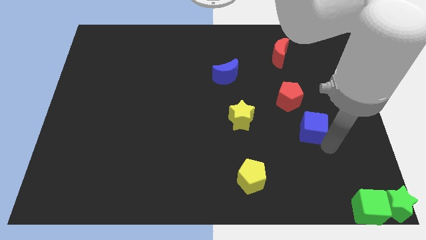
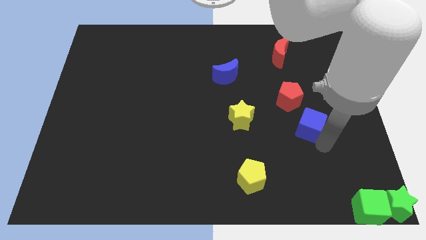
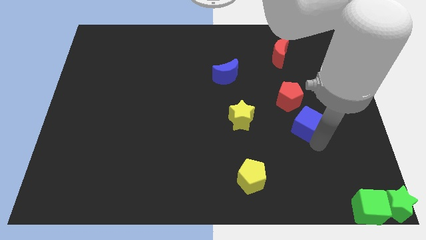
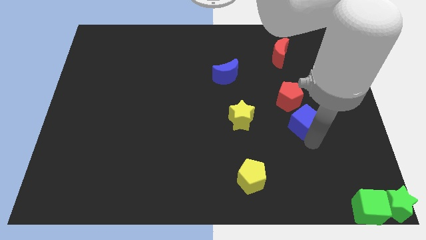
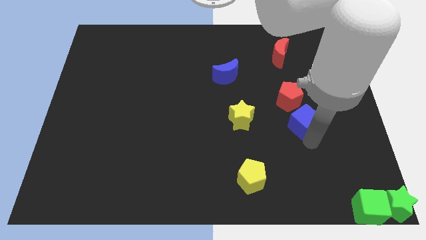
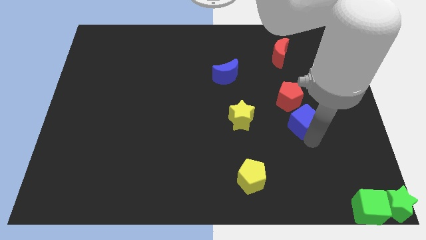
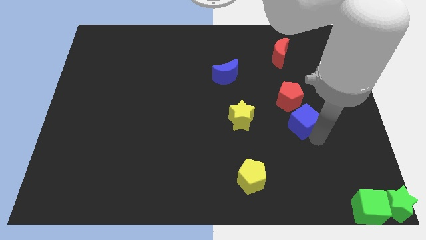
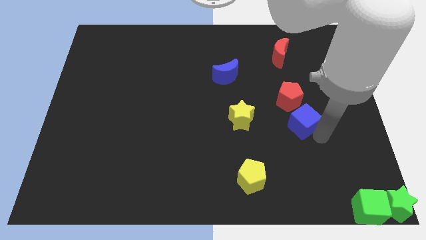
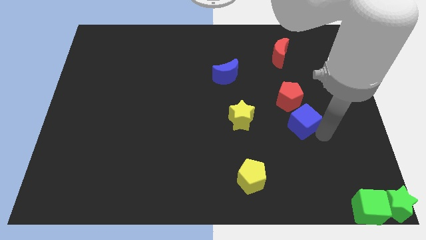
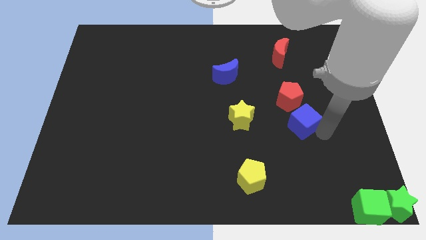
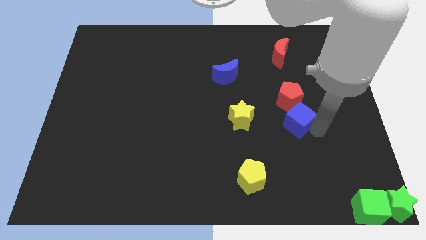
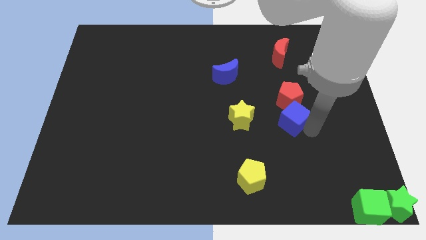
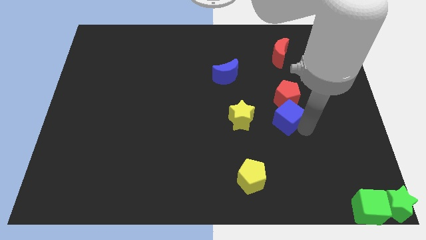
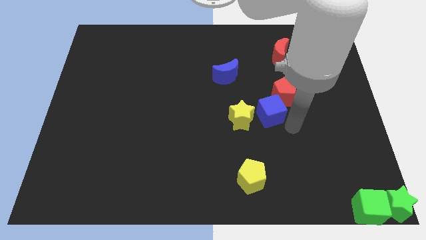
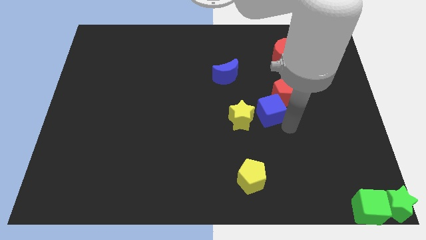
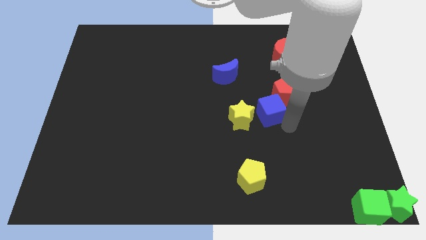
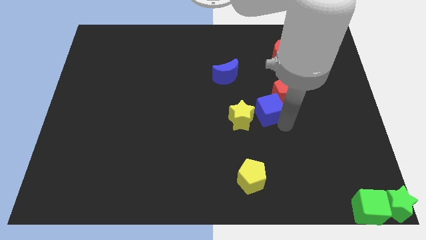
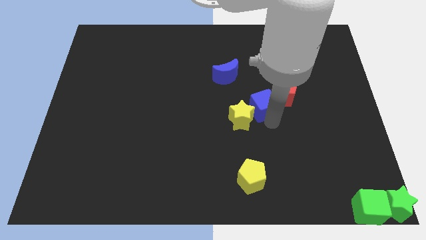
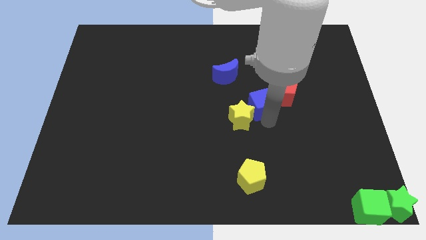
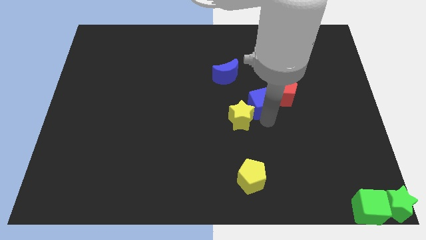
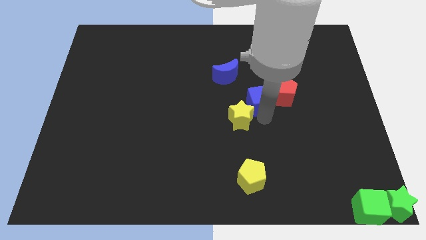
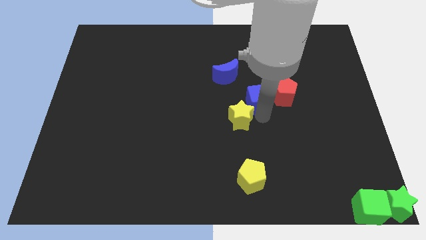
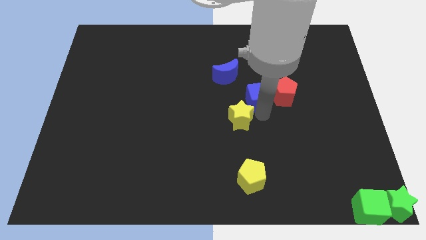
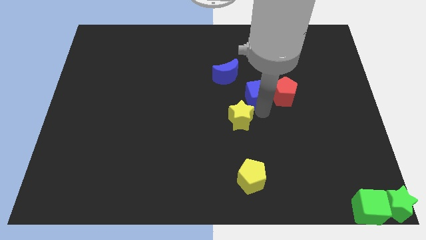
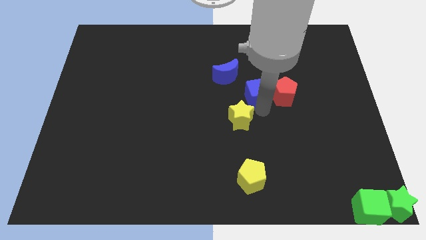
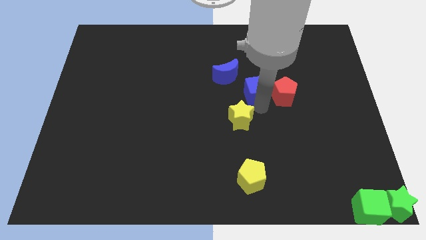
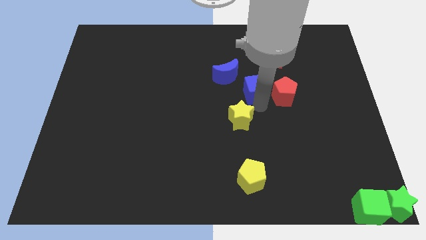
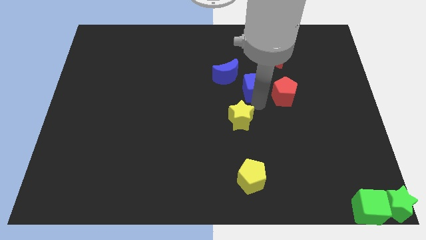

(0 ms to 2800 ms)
move the blue cube to the left of the red pentagon

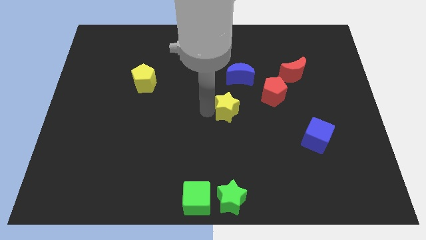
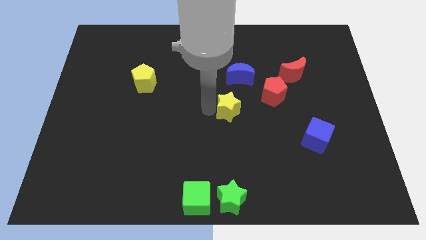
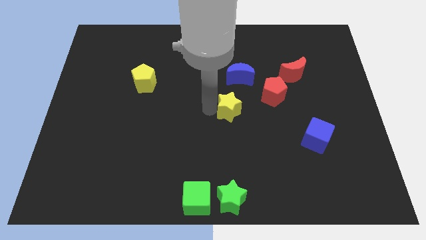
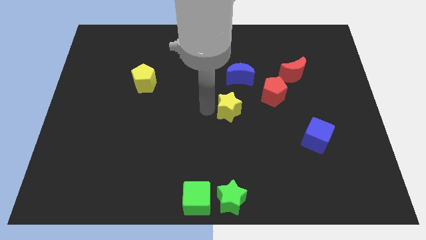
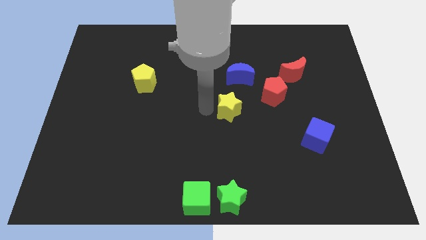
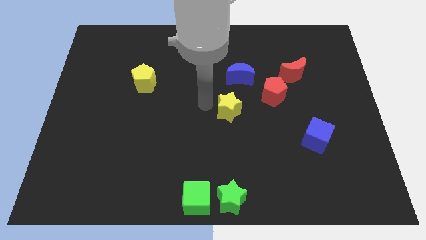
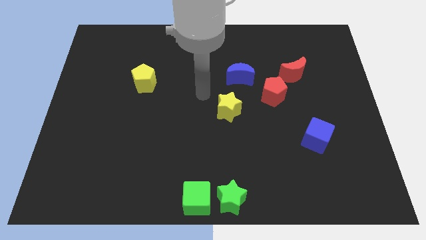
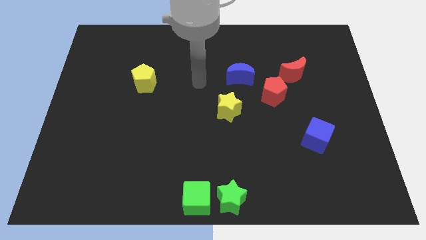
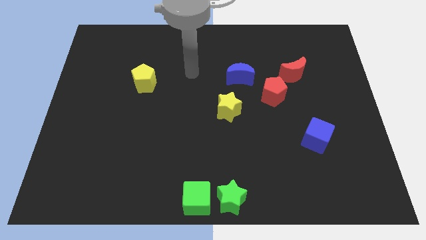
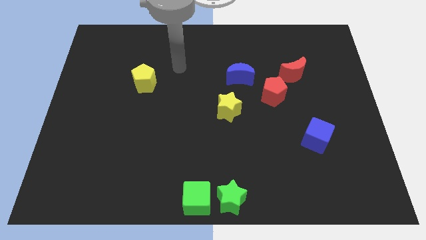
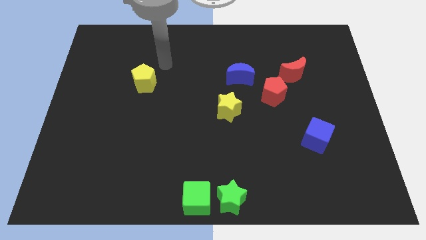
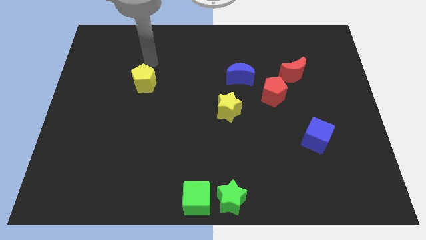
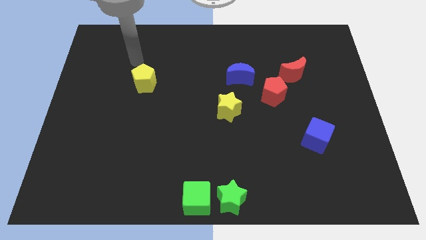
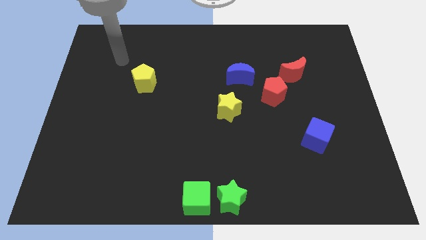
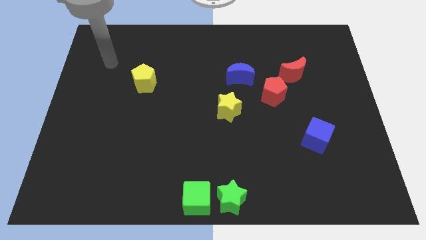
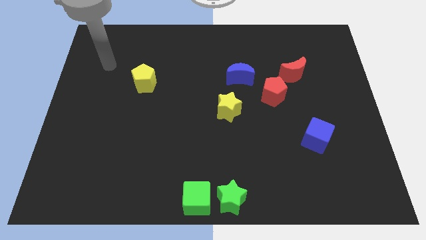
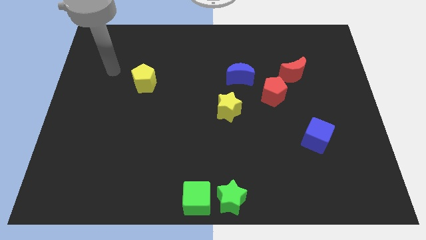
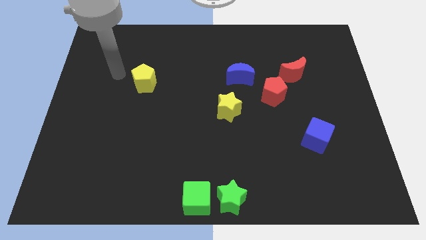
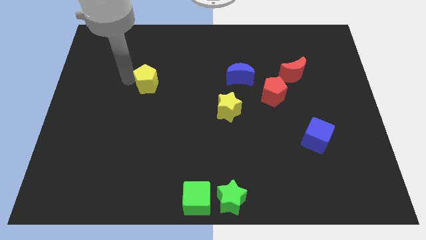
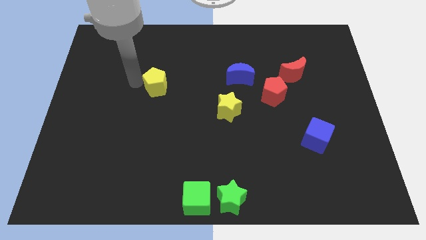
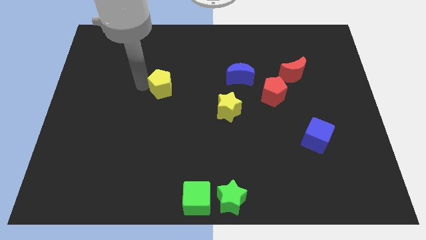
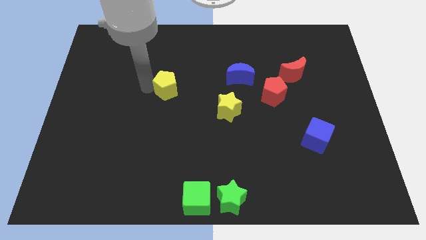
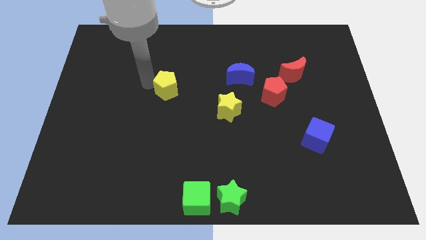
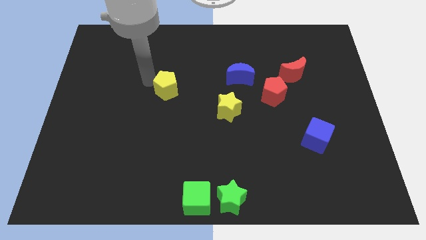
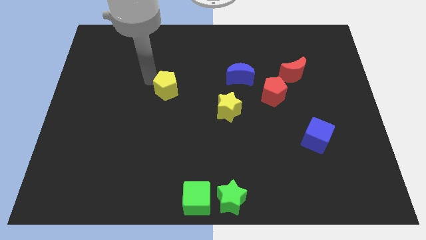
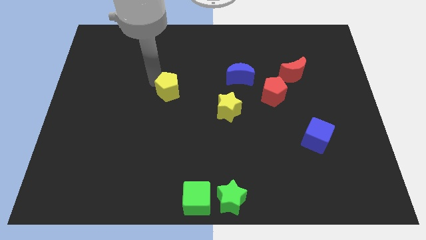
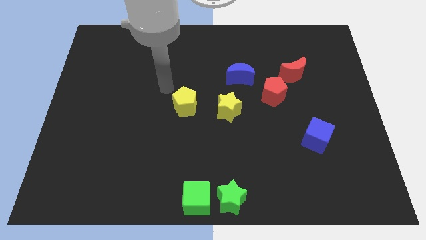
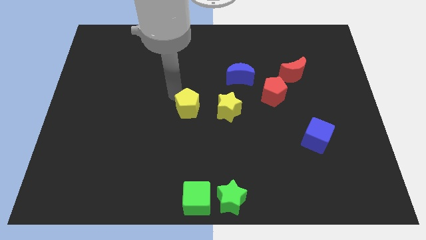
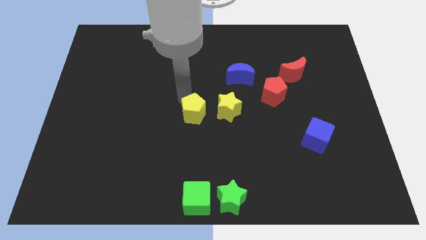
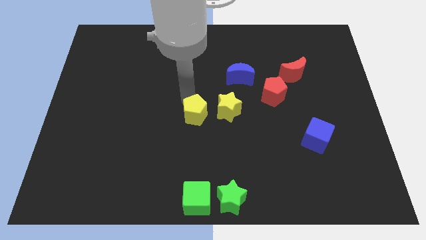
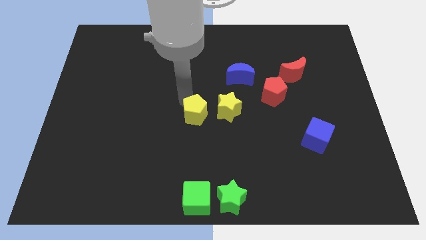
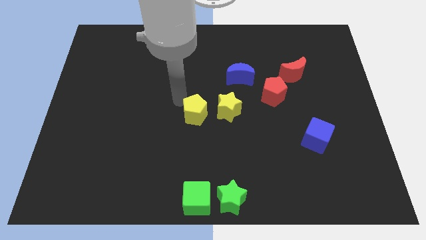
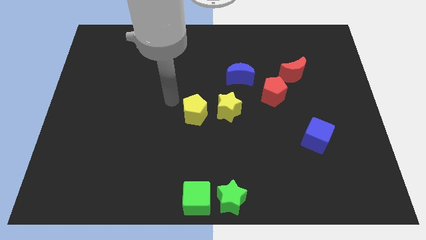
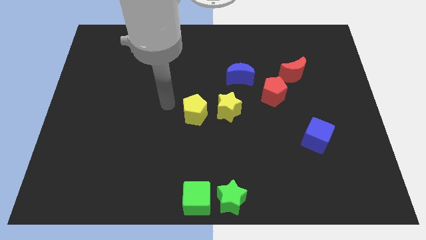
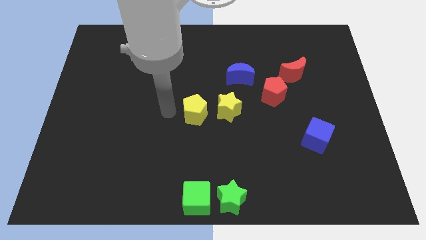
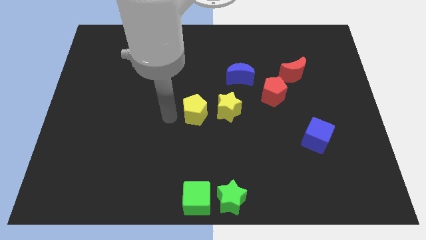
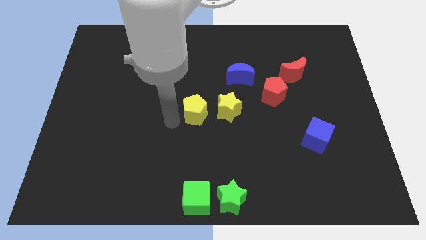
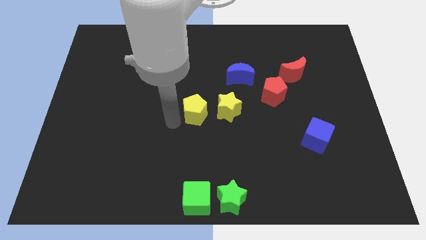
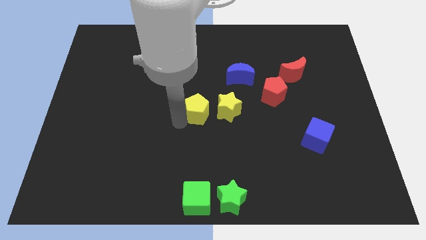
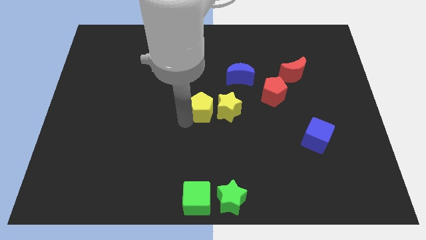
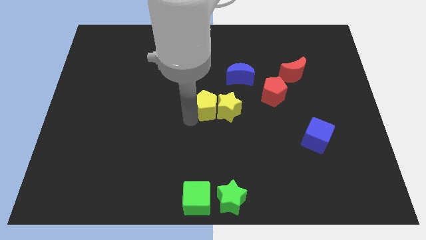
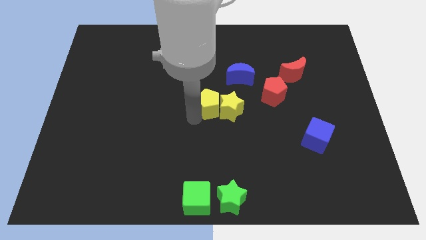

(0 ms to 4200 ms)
place yellow pentagon to the left of yellow star

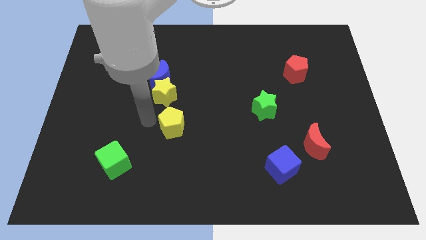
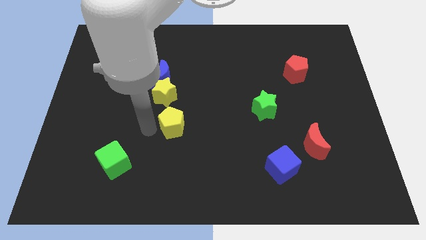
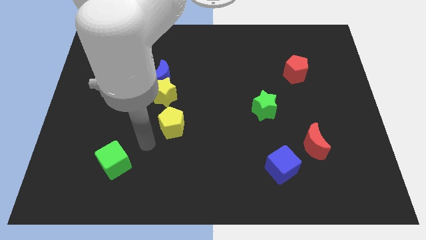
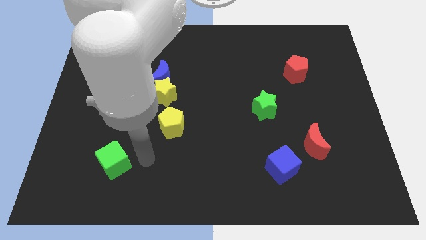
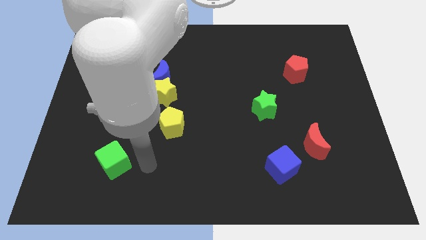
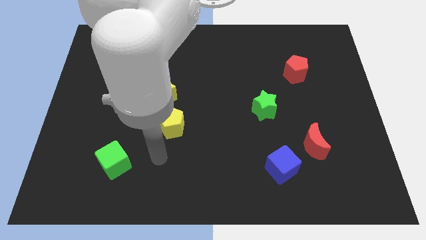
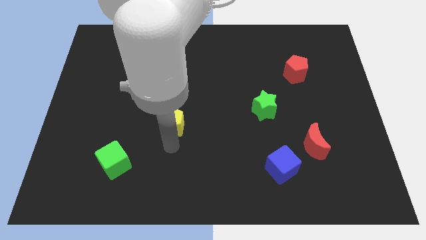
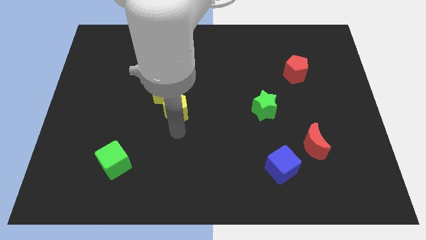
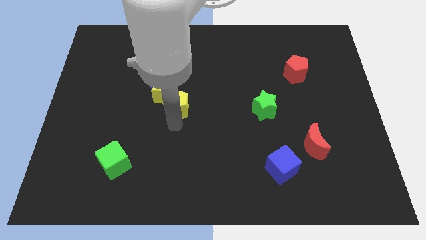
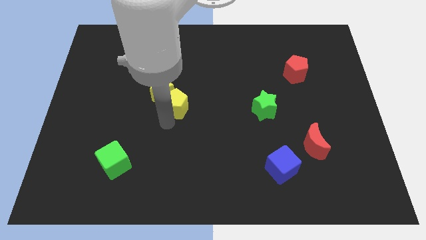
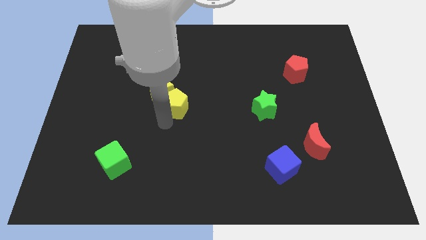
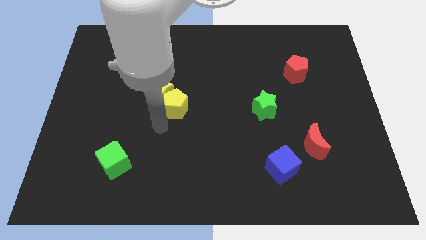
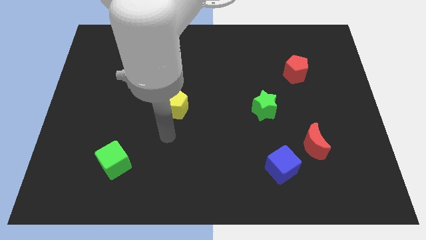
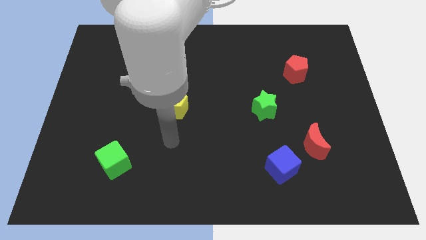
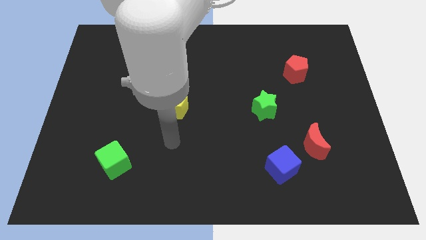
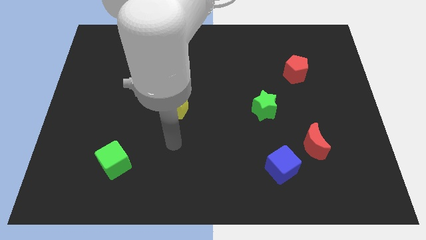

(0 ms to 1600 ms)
push yellow pentagon into the yellow star

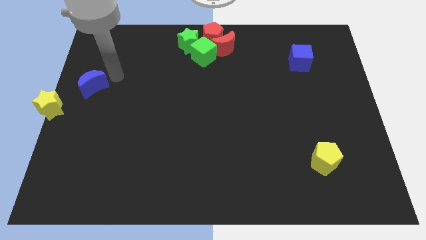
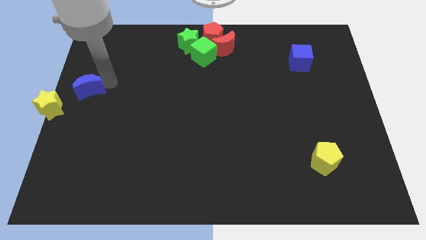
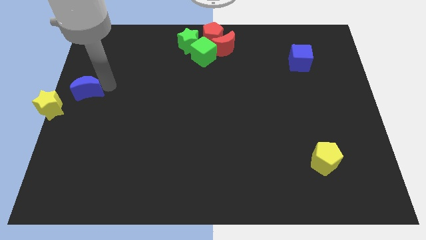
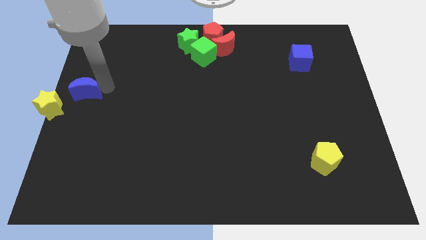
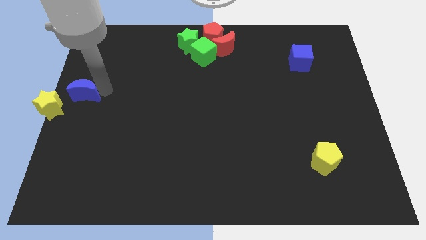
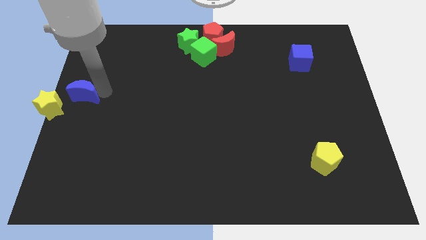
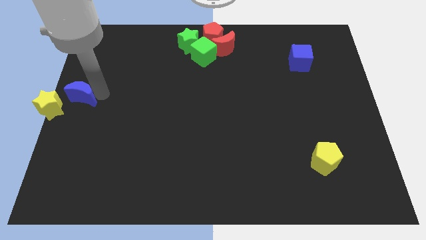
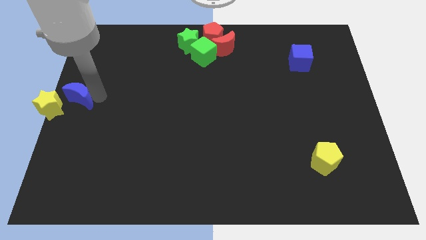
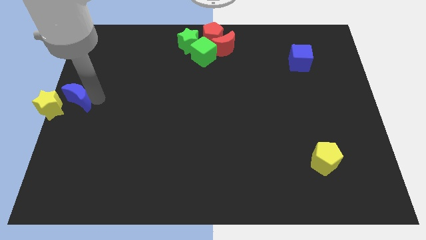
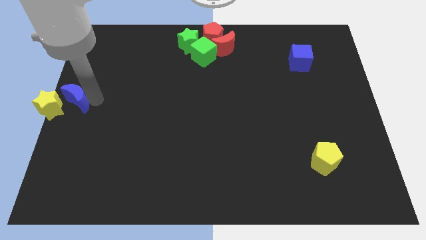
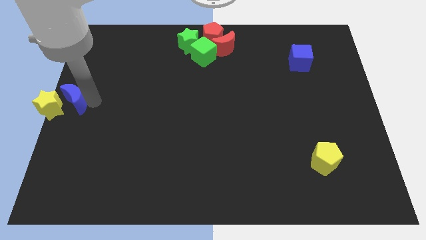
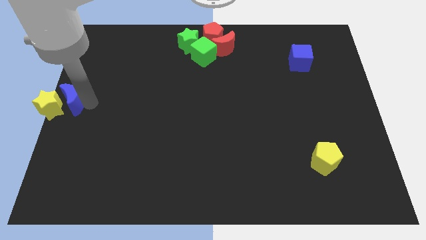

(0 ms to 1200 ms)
place the blue crescent close to the yellow star
